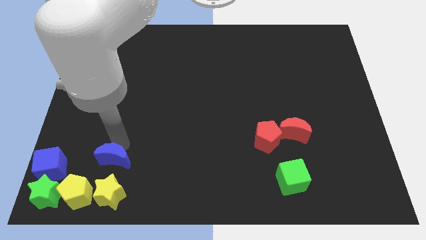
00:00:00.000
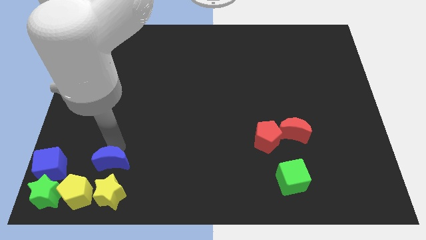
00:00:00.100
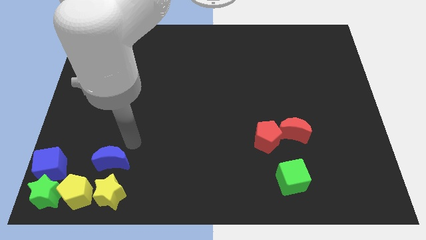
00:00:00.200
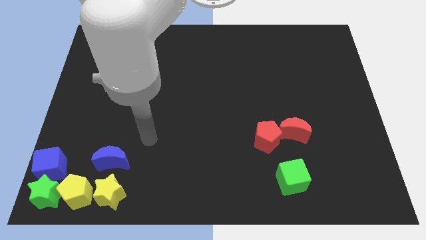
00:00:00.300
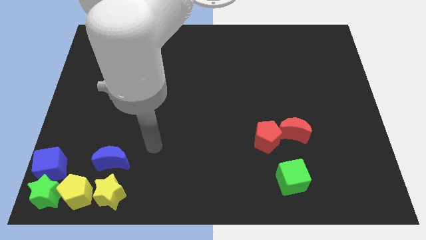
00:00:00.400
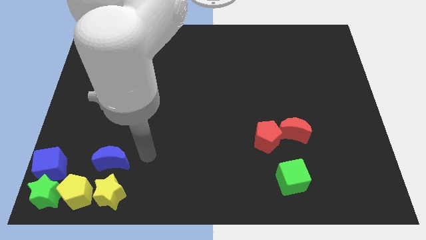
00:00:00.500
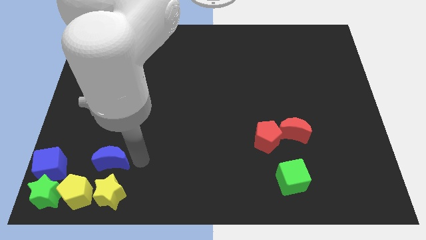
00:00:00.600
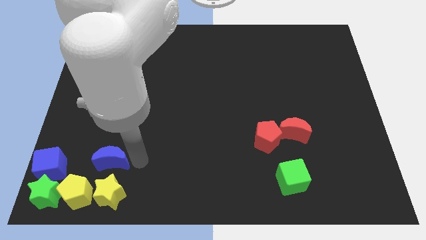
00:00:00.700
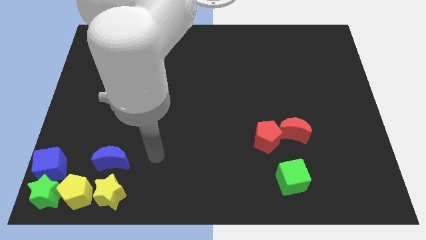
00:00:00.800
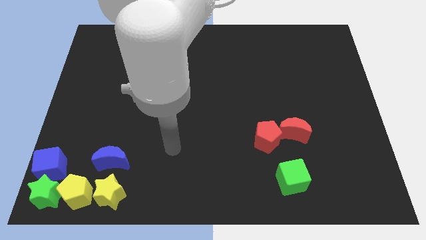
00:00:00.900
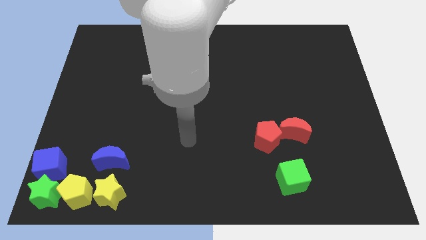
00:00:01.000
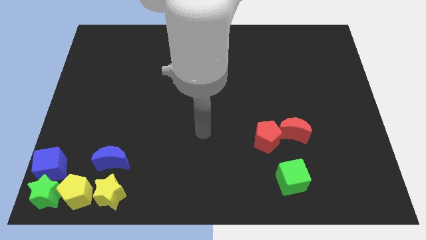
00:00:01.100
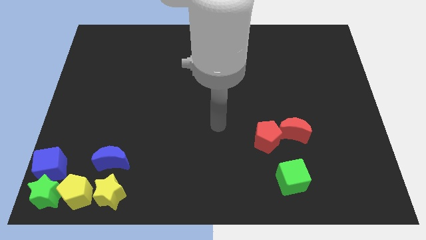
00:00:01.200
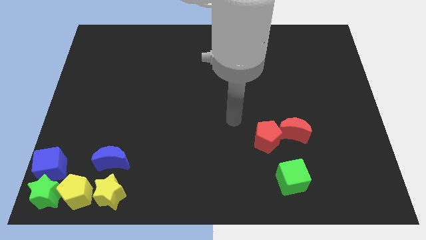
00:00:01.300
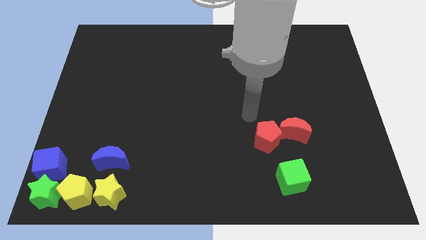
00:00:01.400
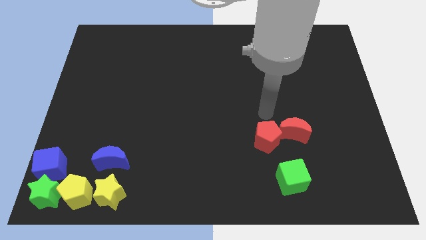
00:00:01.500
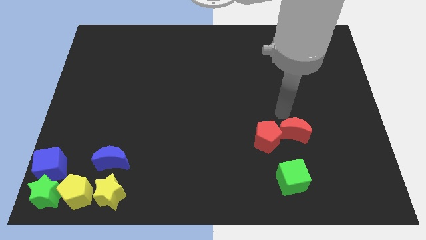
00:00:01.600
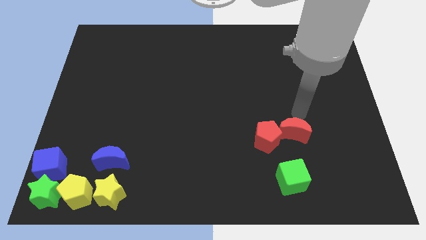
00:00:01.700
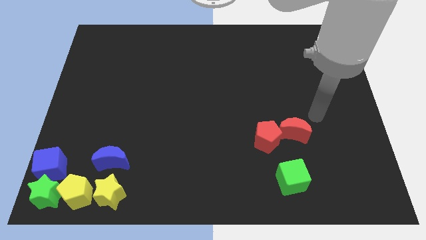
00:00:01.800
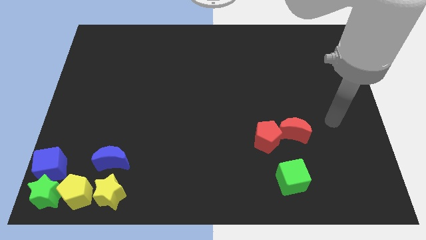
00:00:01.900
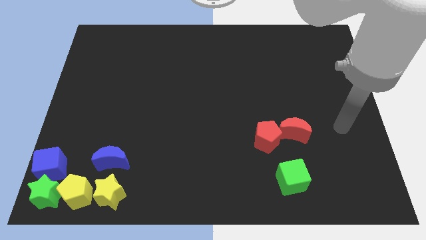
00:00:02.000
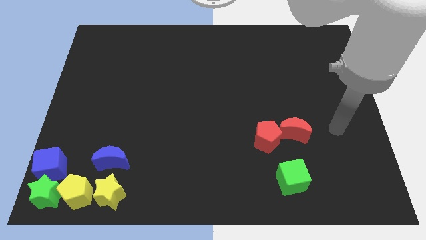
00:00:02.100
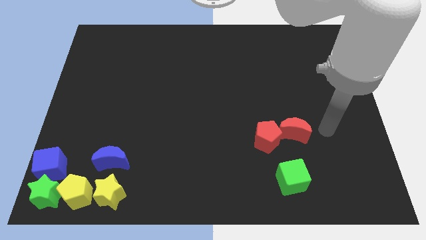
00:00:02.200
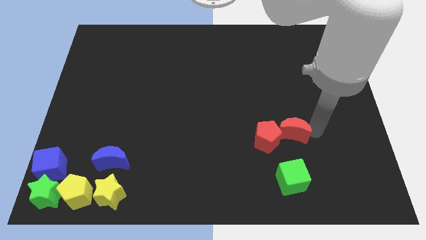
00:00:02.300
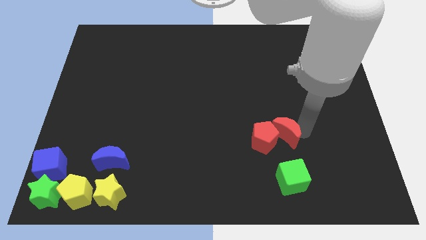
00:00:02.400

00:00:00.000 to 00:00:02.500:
push red crescent above green cube

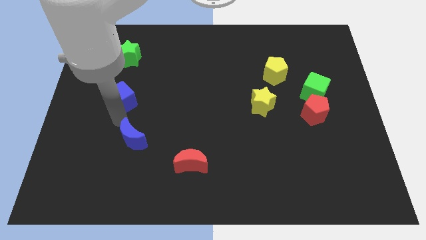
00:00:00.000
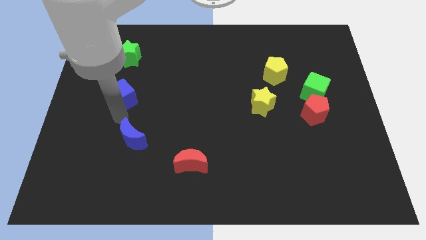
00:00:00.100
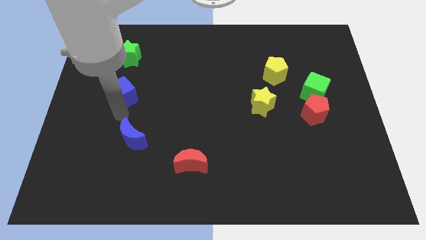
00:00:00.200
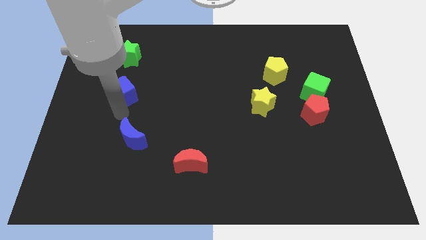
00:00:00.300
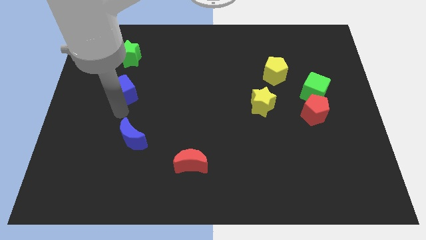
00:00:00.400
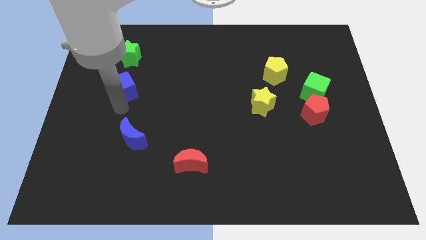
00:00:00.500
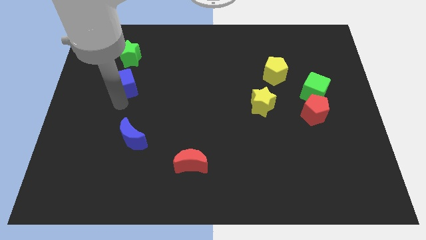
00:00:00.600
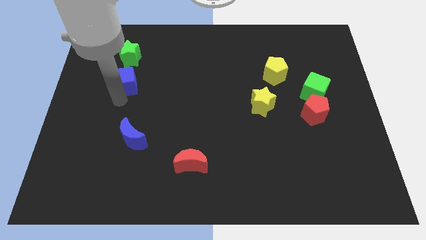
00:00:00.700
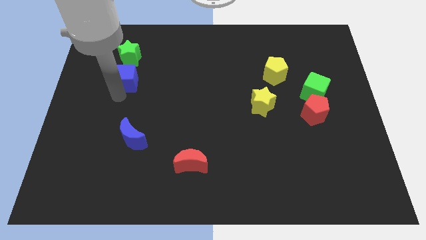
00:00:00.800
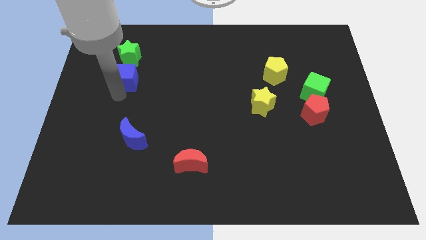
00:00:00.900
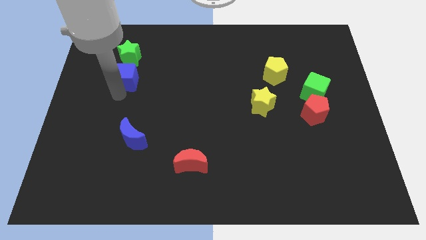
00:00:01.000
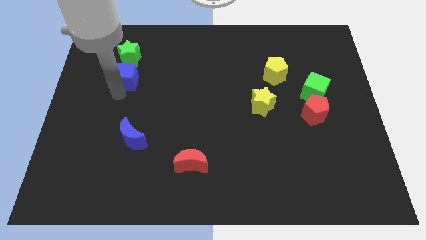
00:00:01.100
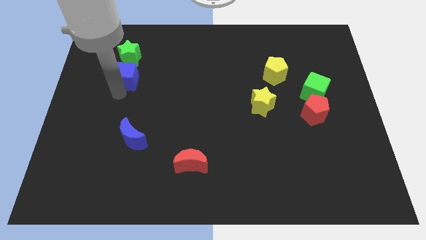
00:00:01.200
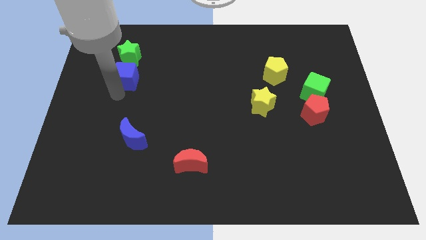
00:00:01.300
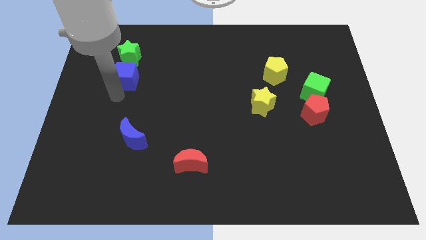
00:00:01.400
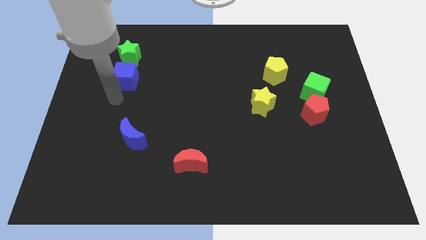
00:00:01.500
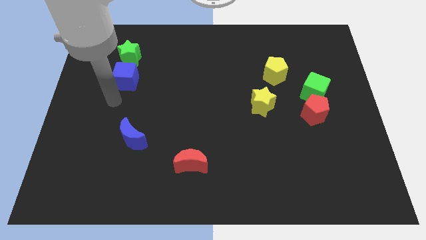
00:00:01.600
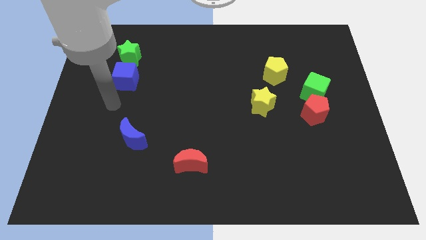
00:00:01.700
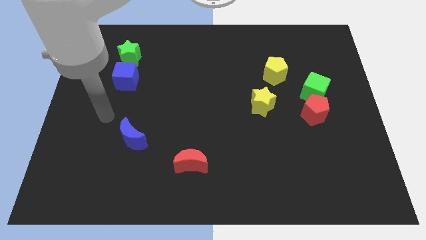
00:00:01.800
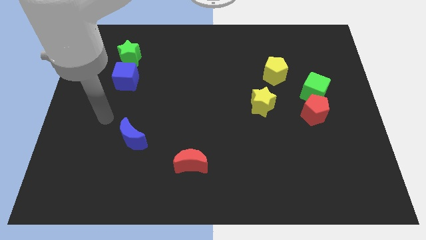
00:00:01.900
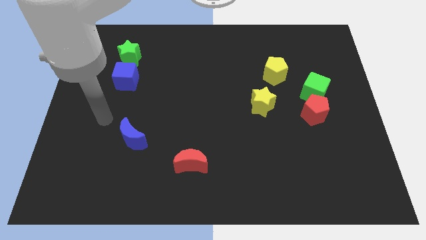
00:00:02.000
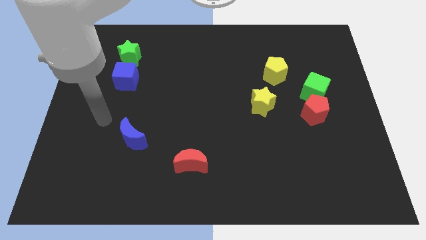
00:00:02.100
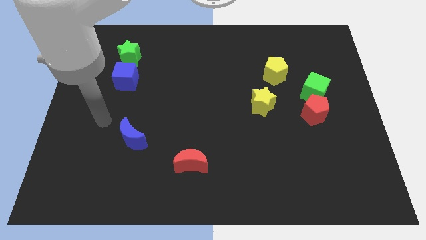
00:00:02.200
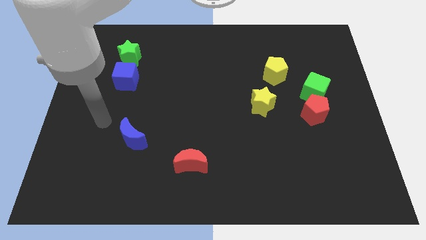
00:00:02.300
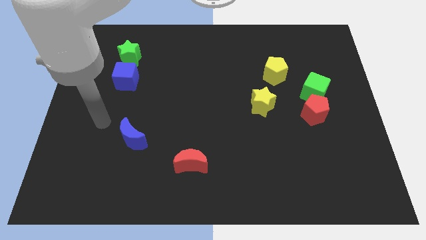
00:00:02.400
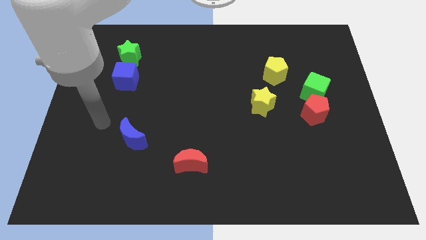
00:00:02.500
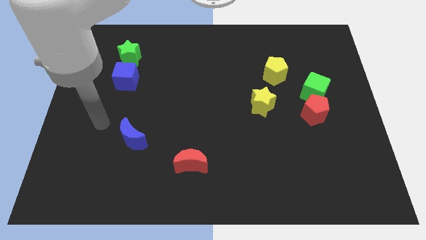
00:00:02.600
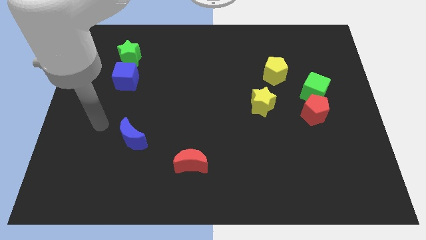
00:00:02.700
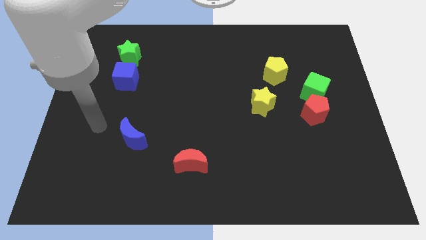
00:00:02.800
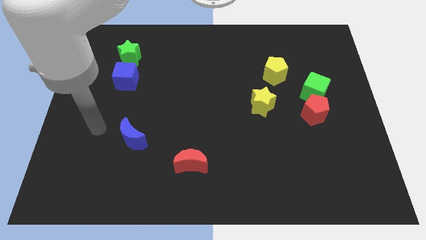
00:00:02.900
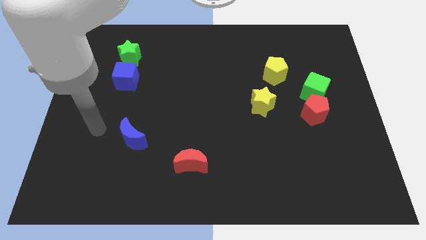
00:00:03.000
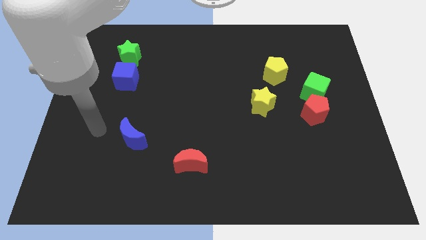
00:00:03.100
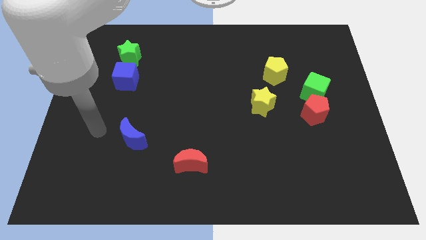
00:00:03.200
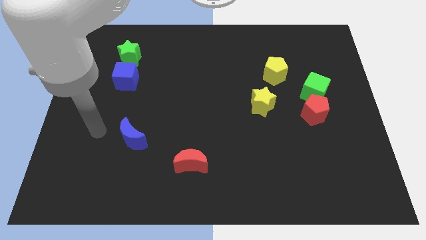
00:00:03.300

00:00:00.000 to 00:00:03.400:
push blue cube below green star

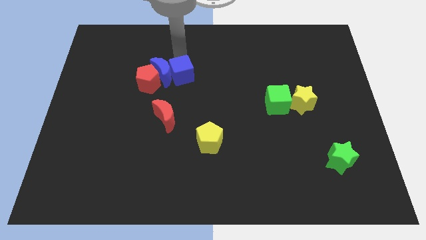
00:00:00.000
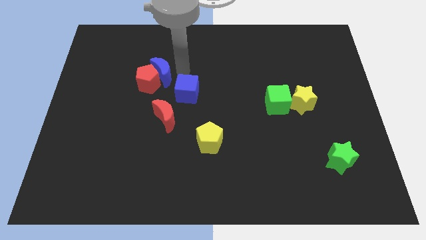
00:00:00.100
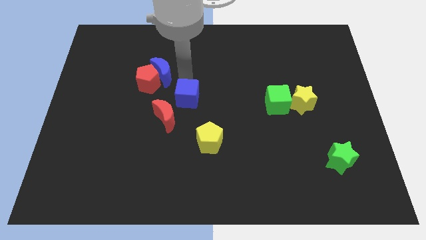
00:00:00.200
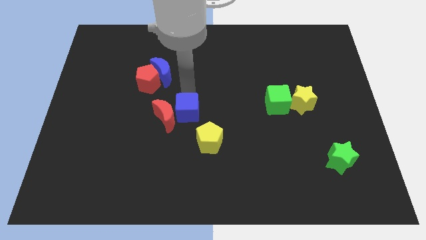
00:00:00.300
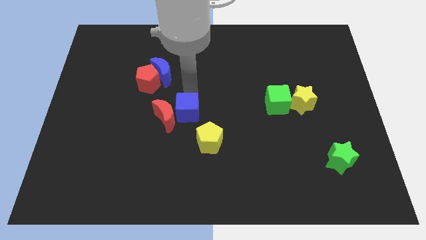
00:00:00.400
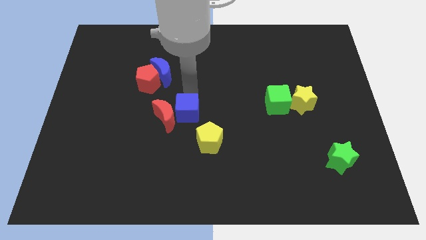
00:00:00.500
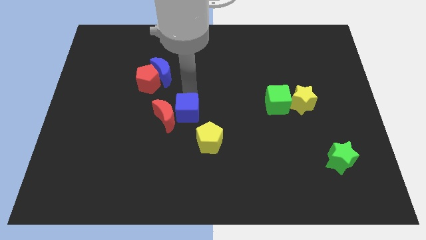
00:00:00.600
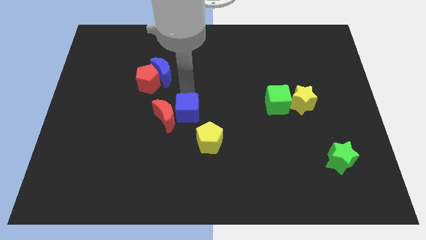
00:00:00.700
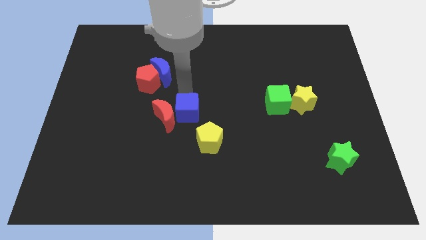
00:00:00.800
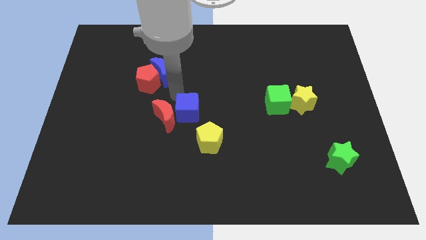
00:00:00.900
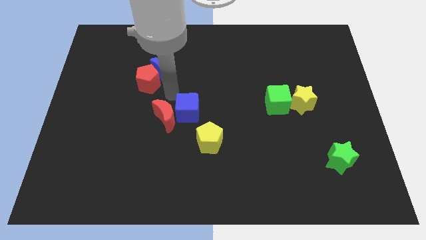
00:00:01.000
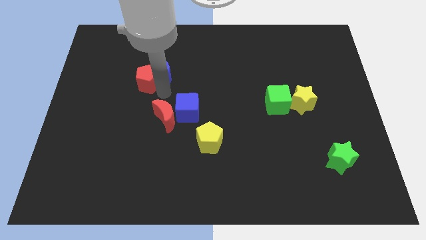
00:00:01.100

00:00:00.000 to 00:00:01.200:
separate the blue cube from the blue crescent

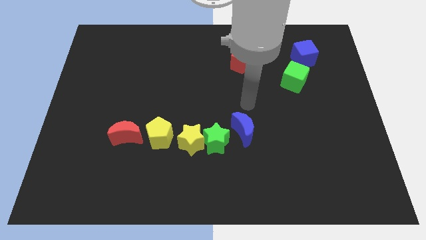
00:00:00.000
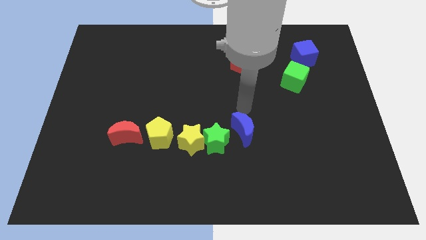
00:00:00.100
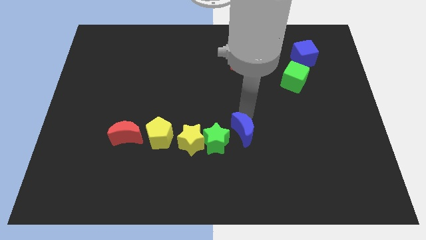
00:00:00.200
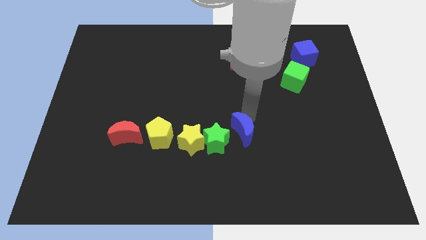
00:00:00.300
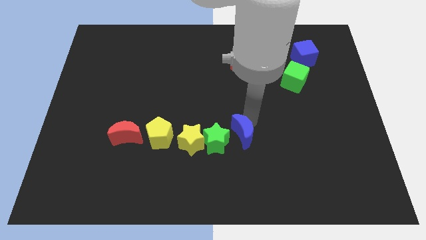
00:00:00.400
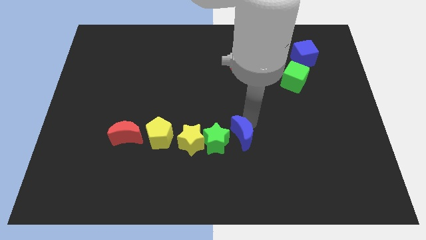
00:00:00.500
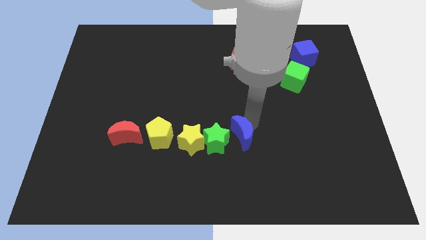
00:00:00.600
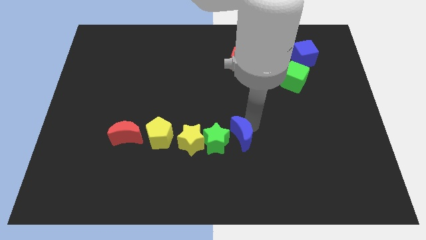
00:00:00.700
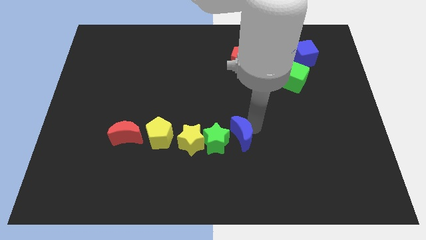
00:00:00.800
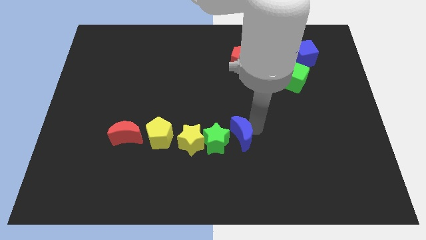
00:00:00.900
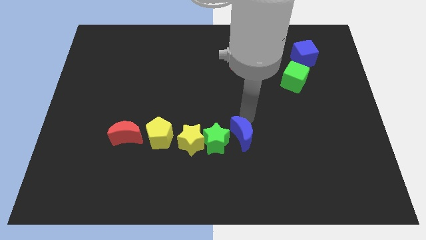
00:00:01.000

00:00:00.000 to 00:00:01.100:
place your arm at the top of the blue crescent

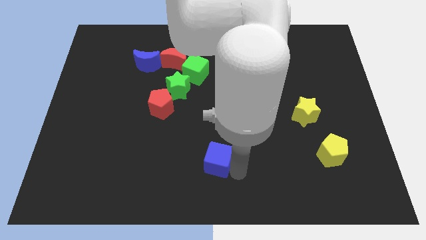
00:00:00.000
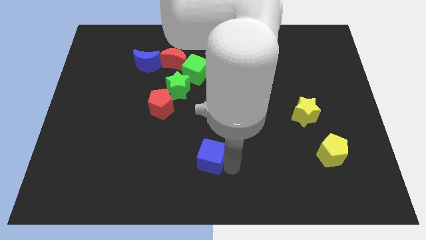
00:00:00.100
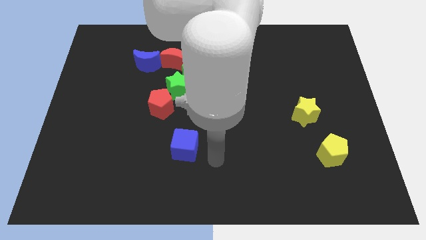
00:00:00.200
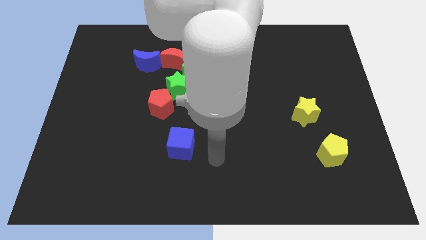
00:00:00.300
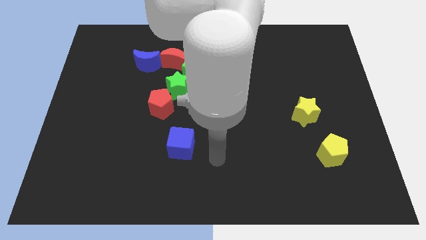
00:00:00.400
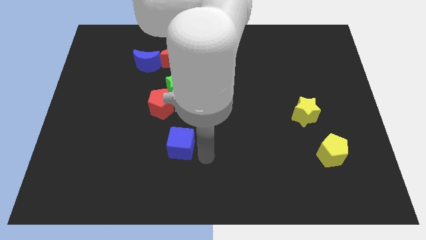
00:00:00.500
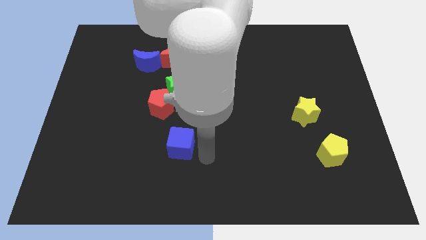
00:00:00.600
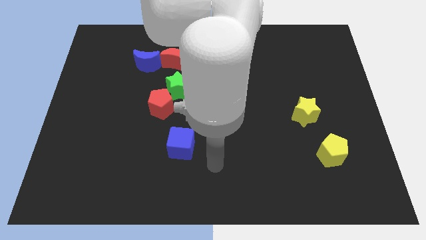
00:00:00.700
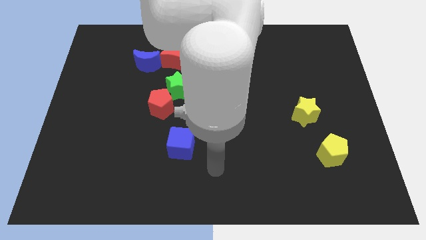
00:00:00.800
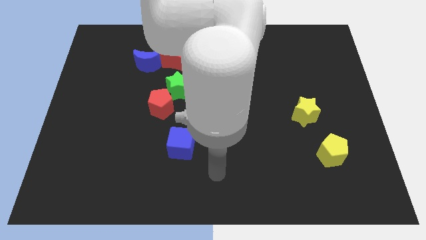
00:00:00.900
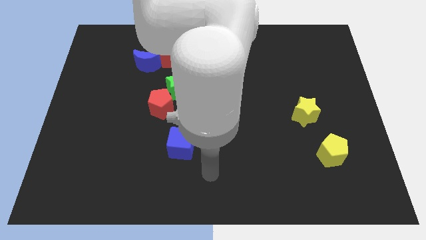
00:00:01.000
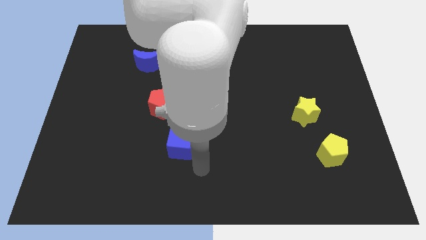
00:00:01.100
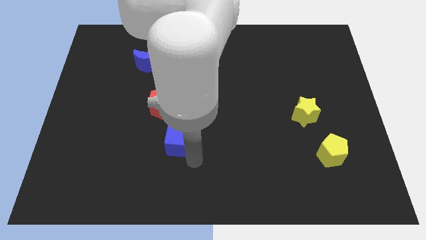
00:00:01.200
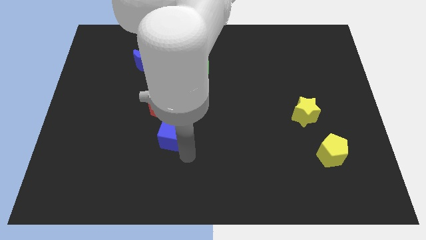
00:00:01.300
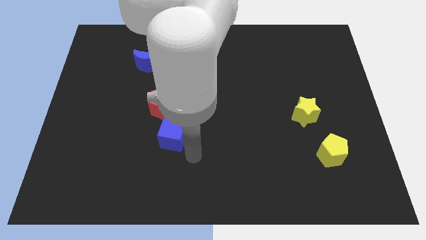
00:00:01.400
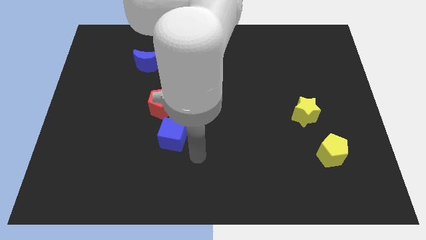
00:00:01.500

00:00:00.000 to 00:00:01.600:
move the blue cube to the bottom of the red pentagon
